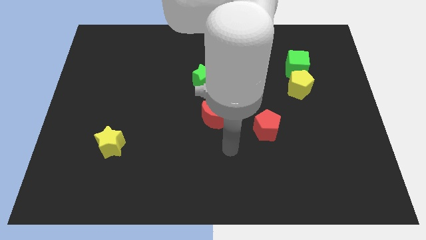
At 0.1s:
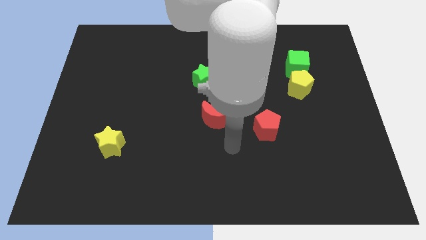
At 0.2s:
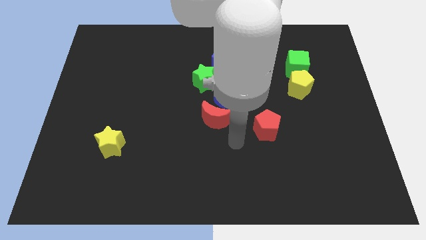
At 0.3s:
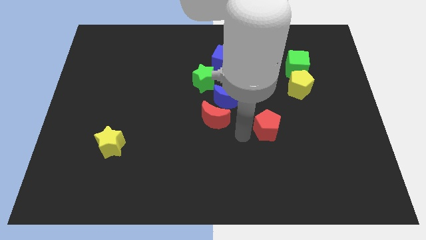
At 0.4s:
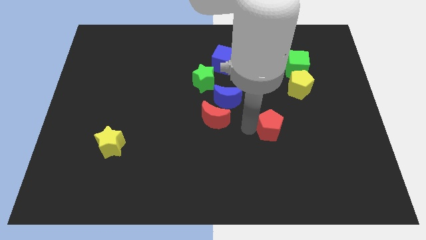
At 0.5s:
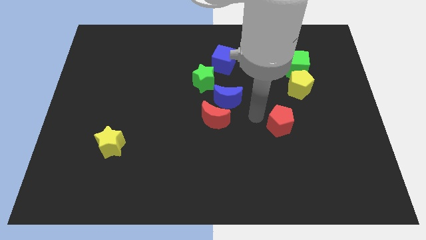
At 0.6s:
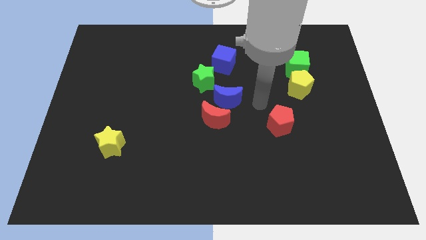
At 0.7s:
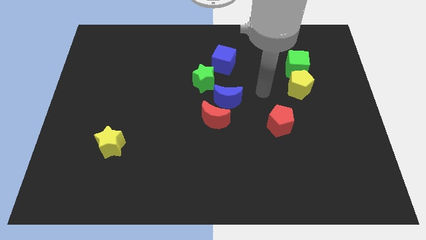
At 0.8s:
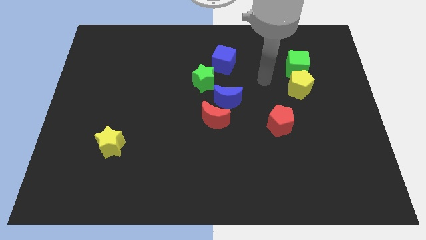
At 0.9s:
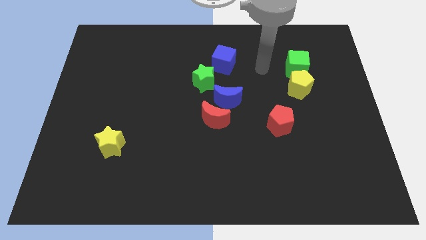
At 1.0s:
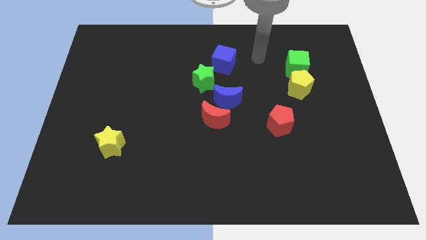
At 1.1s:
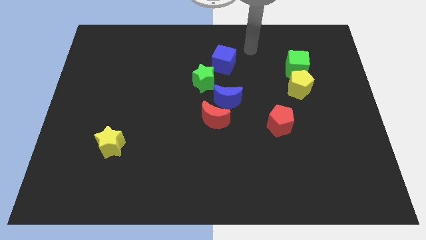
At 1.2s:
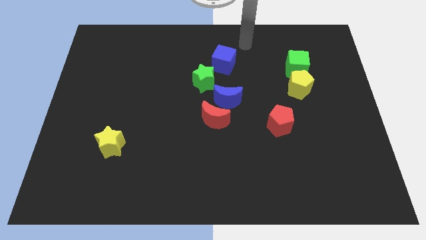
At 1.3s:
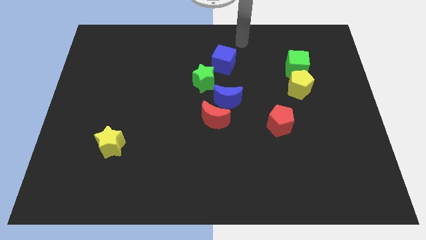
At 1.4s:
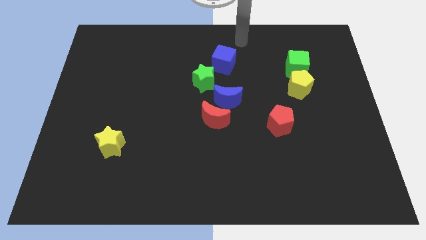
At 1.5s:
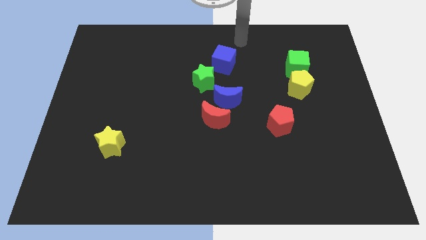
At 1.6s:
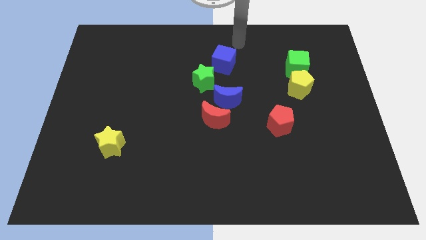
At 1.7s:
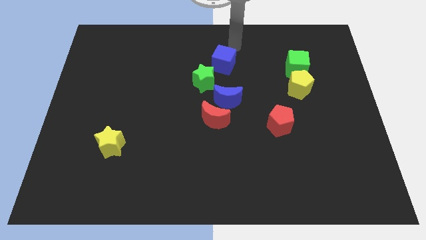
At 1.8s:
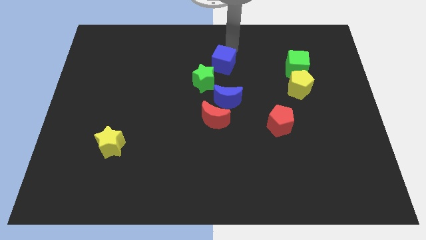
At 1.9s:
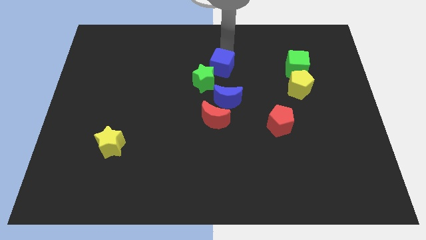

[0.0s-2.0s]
point your arm above blue cube

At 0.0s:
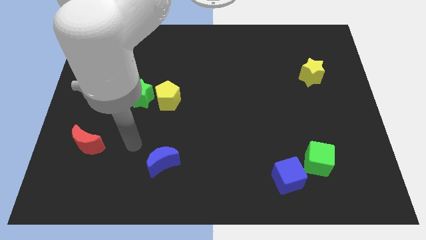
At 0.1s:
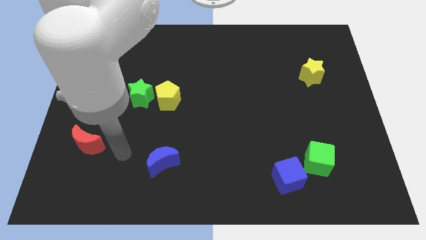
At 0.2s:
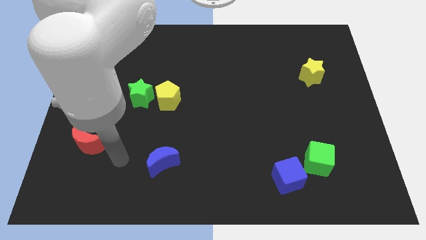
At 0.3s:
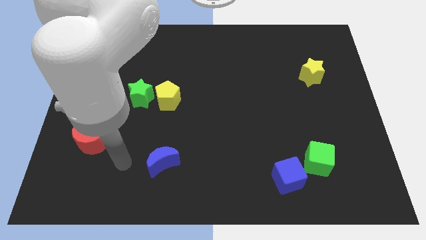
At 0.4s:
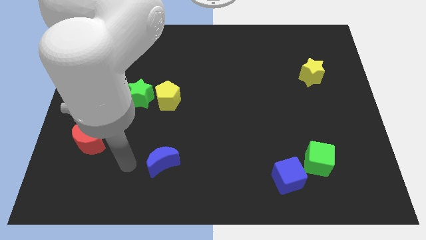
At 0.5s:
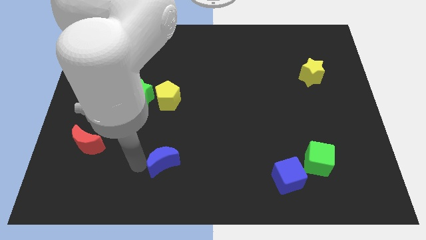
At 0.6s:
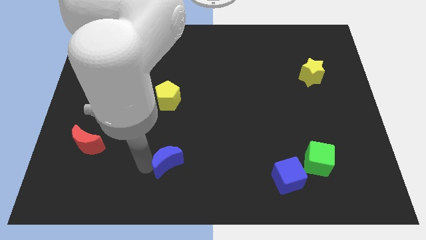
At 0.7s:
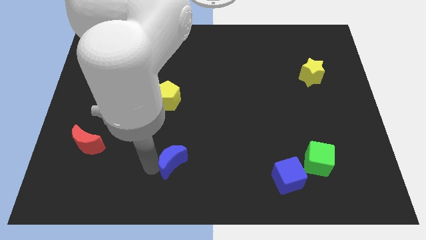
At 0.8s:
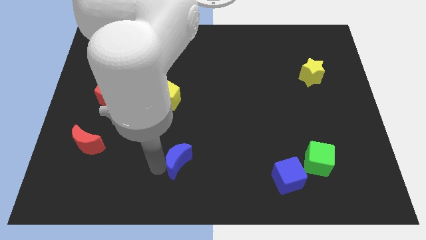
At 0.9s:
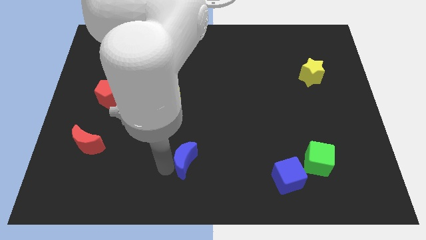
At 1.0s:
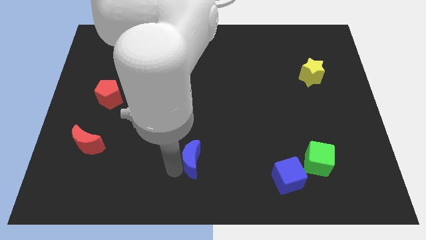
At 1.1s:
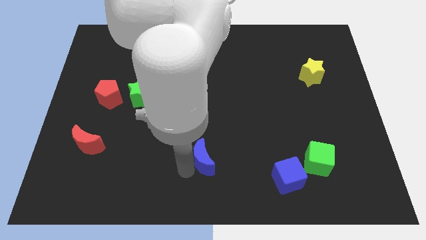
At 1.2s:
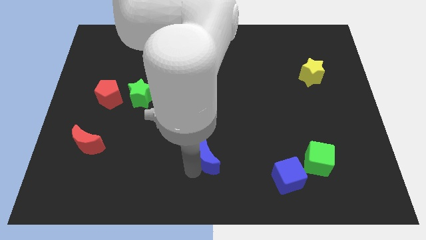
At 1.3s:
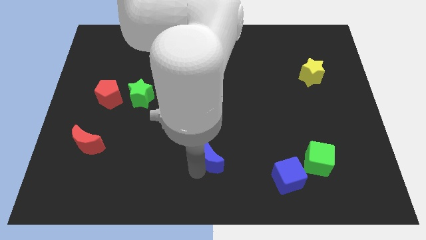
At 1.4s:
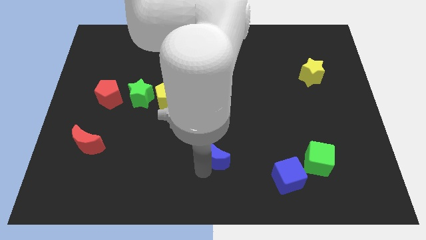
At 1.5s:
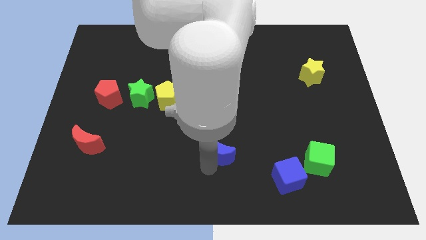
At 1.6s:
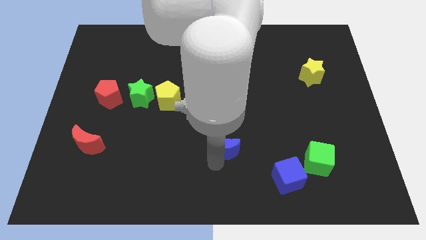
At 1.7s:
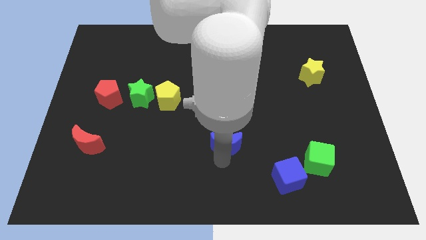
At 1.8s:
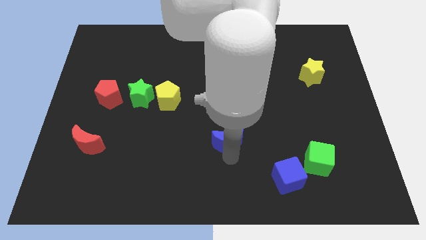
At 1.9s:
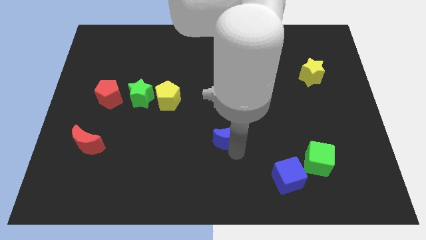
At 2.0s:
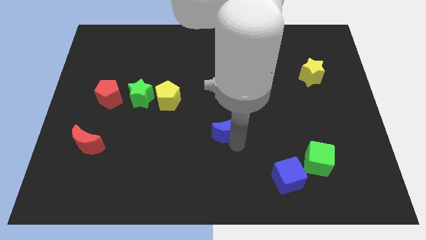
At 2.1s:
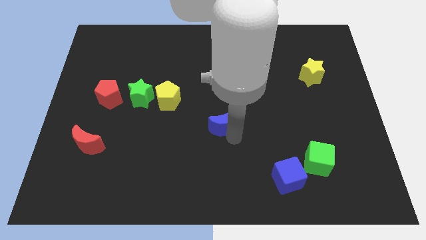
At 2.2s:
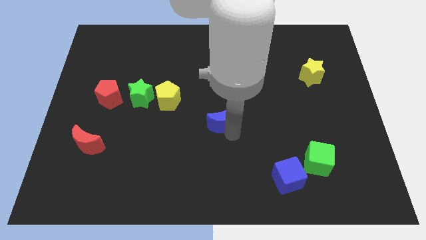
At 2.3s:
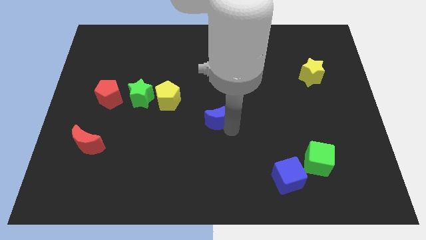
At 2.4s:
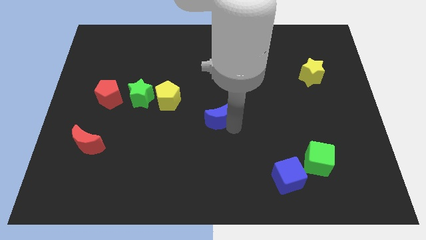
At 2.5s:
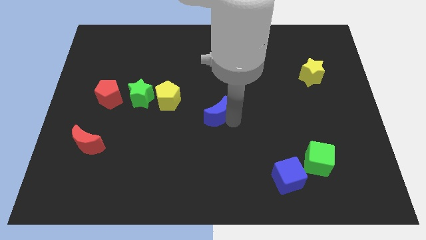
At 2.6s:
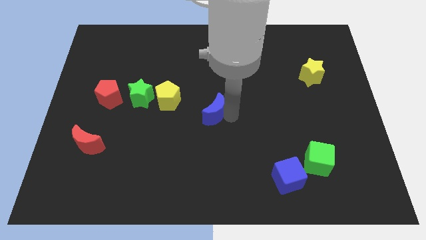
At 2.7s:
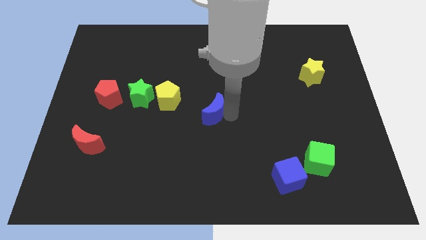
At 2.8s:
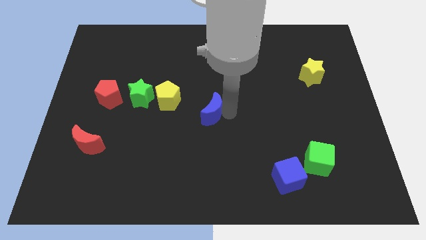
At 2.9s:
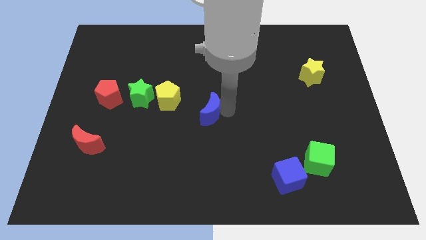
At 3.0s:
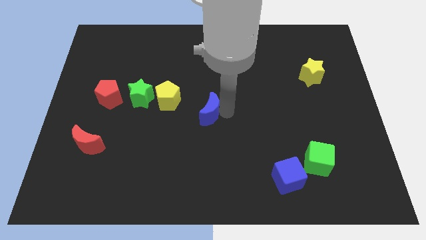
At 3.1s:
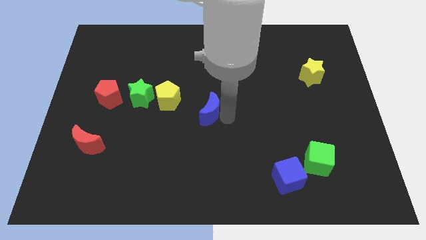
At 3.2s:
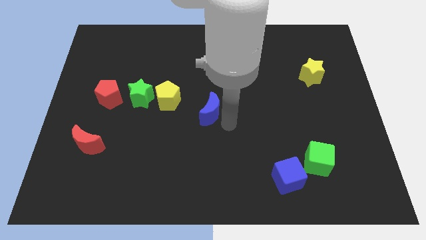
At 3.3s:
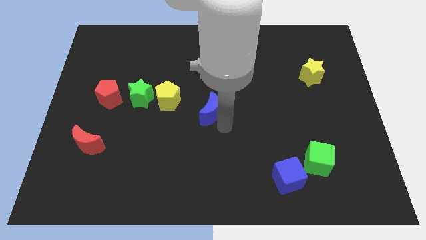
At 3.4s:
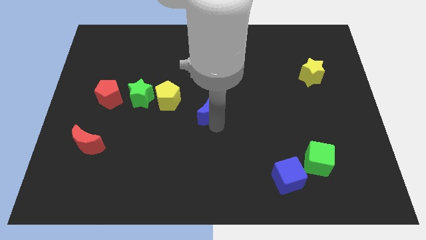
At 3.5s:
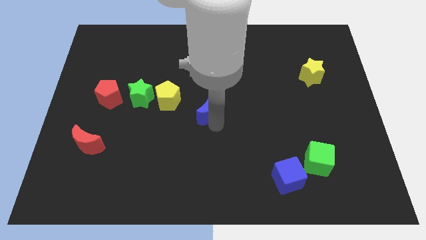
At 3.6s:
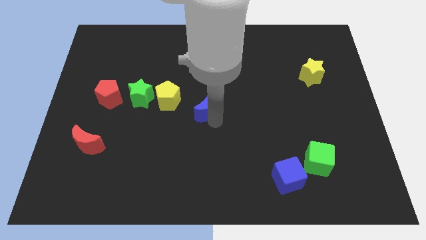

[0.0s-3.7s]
slide the blue moon towards the right of the yellow pentagon

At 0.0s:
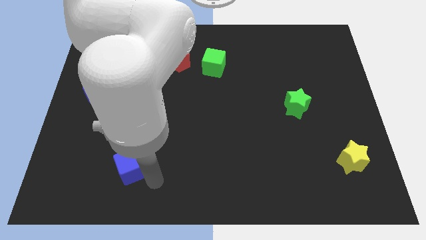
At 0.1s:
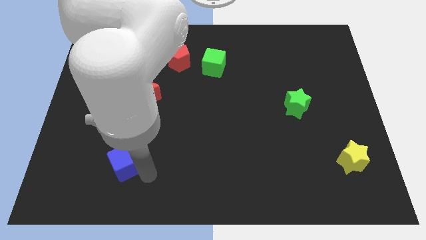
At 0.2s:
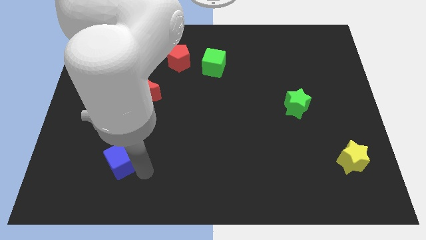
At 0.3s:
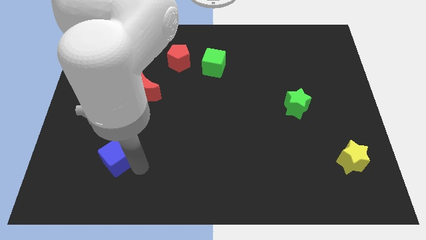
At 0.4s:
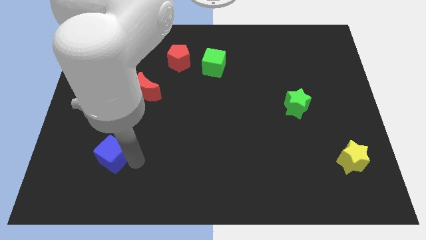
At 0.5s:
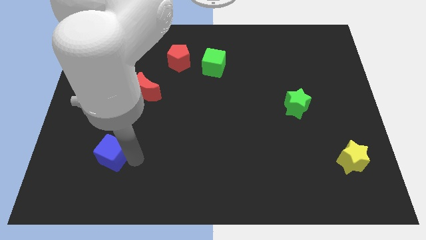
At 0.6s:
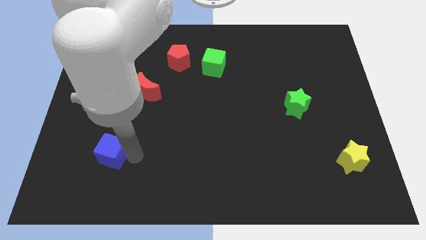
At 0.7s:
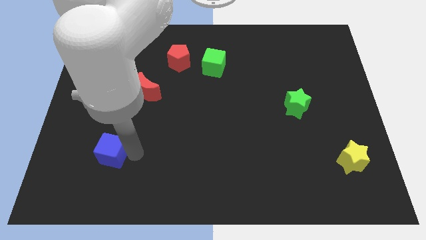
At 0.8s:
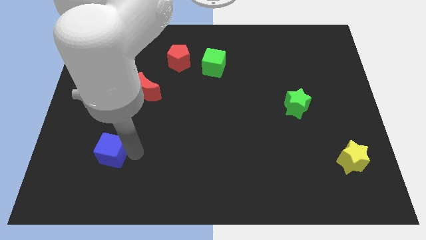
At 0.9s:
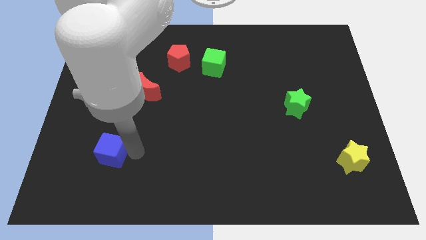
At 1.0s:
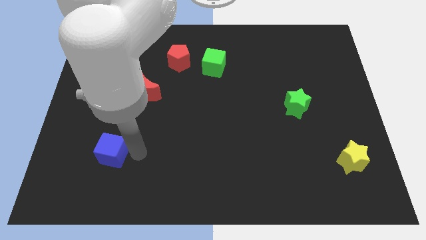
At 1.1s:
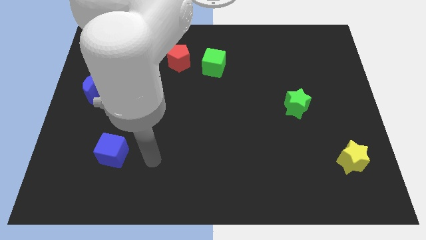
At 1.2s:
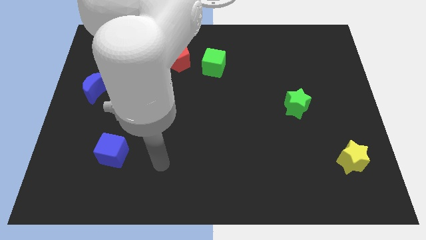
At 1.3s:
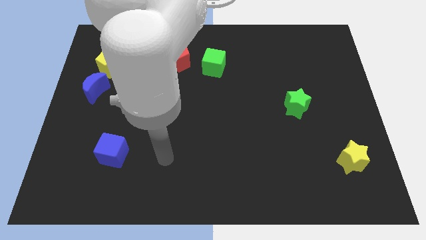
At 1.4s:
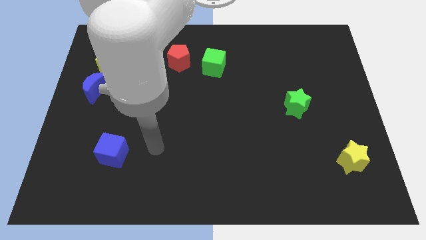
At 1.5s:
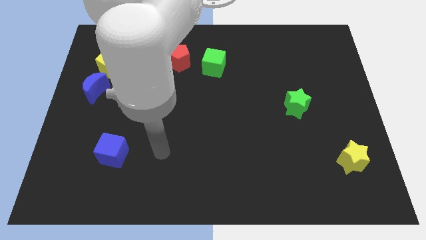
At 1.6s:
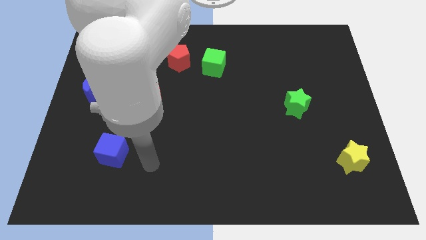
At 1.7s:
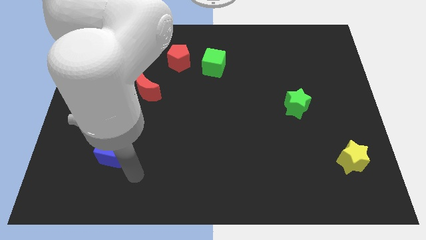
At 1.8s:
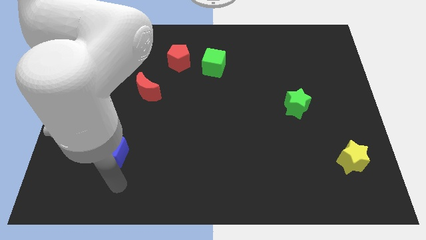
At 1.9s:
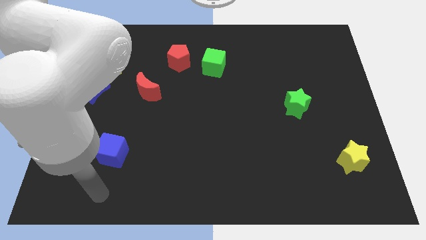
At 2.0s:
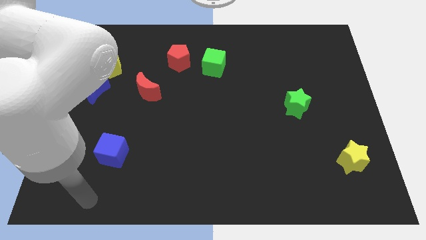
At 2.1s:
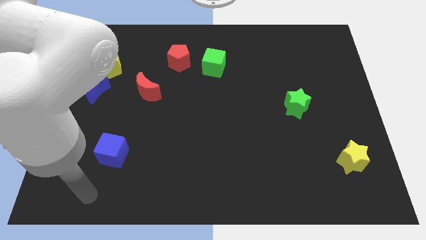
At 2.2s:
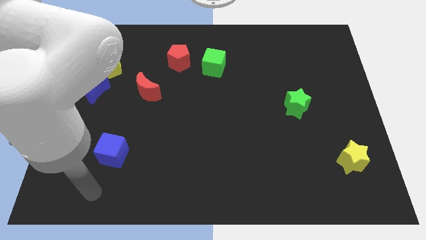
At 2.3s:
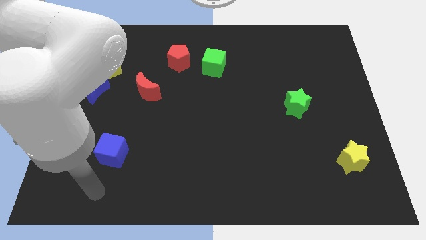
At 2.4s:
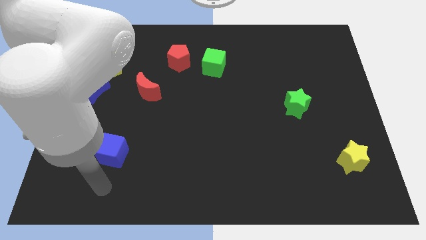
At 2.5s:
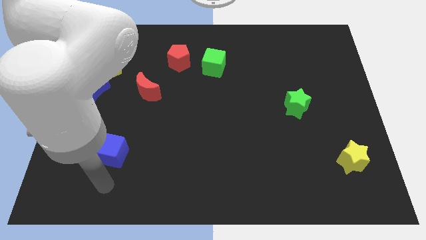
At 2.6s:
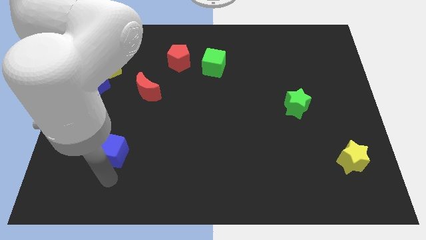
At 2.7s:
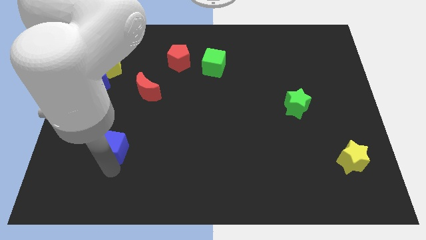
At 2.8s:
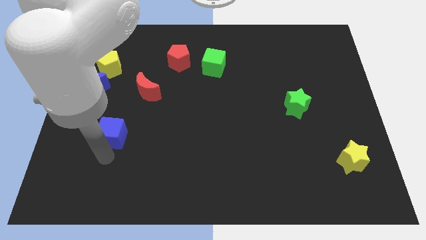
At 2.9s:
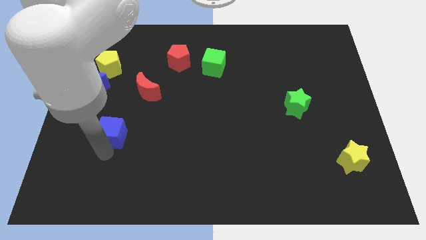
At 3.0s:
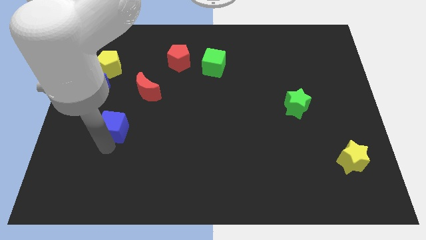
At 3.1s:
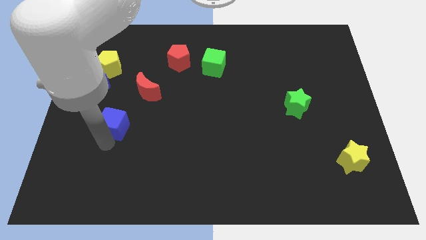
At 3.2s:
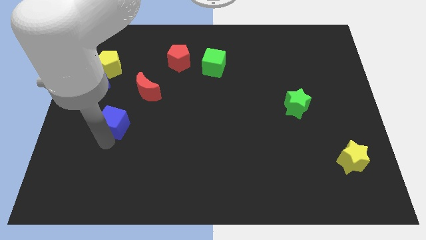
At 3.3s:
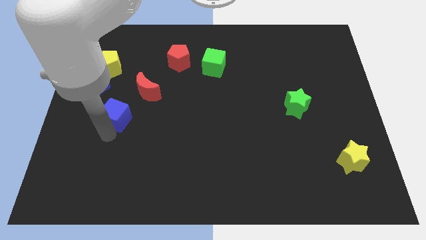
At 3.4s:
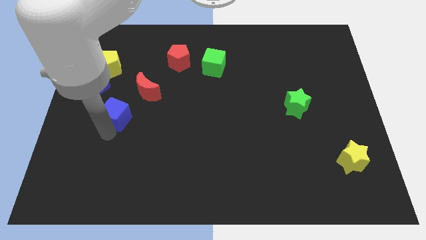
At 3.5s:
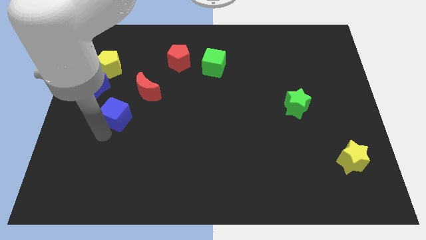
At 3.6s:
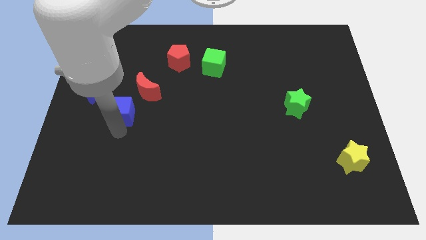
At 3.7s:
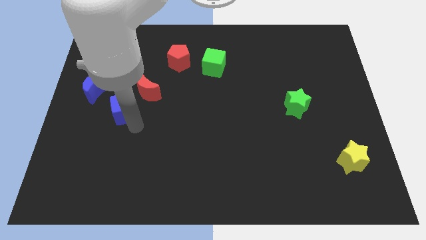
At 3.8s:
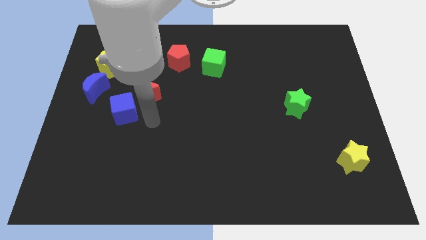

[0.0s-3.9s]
move the blue cube between red and blue moons
